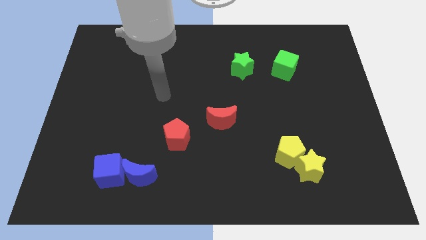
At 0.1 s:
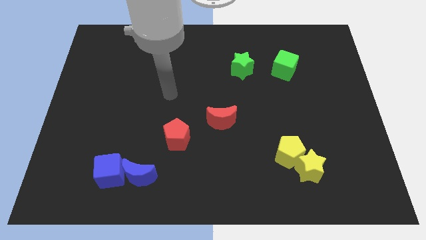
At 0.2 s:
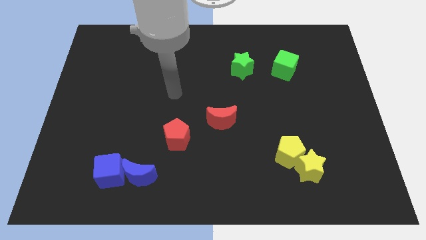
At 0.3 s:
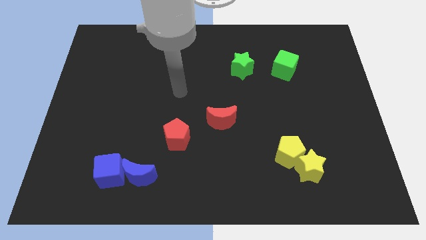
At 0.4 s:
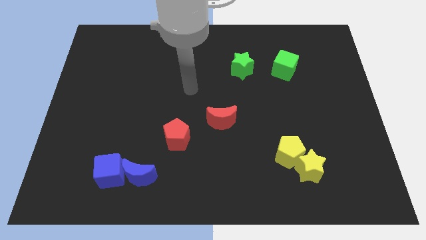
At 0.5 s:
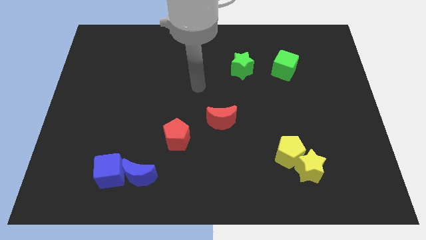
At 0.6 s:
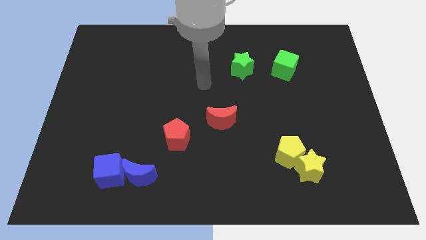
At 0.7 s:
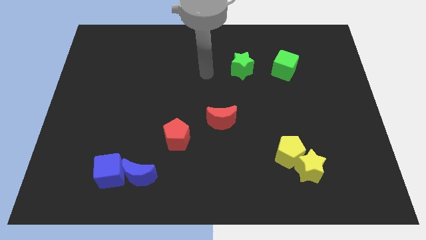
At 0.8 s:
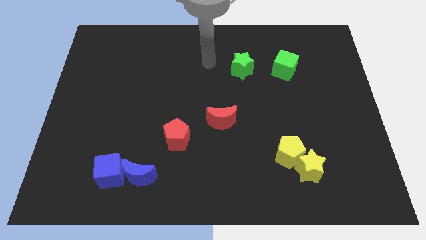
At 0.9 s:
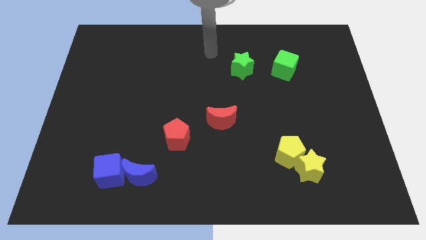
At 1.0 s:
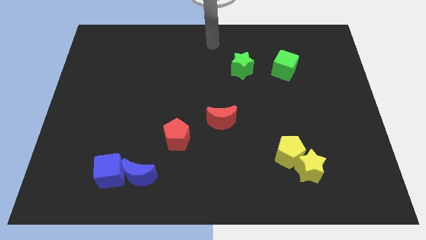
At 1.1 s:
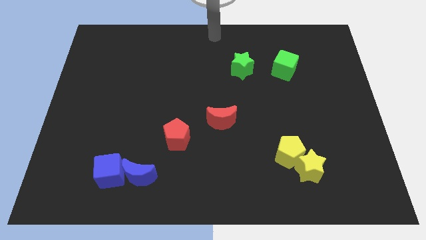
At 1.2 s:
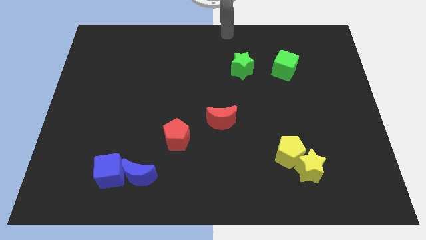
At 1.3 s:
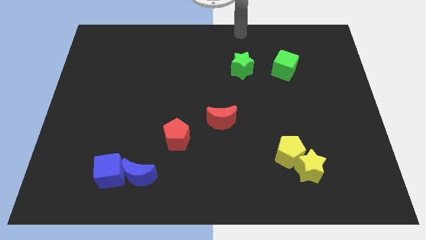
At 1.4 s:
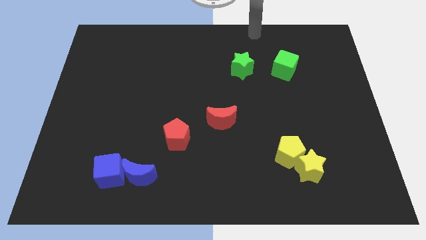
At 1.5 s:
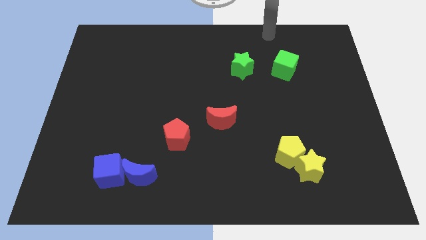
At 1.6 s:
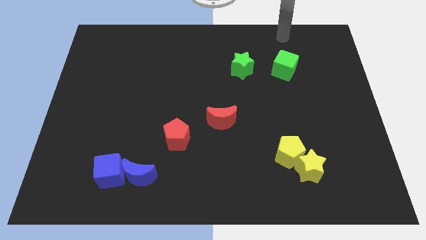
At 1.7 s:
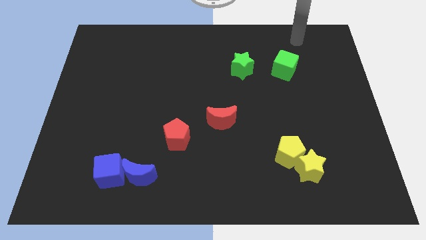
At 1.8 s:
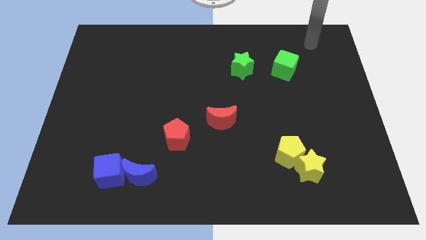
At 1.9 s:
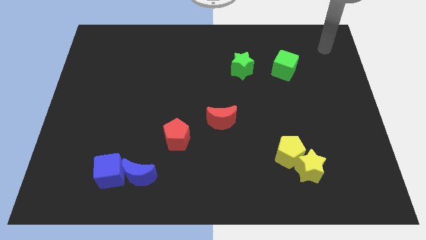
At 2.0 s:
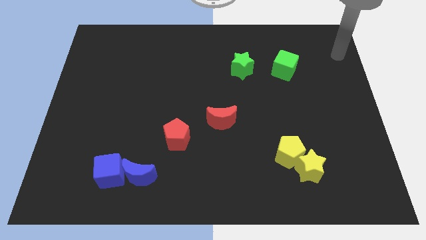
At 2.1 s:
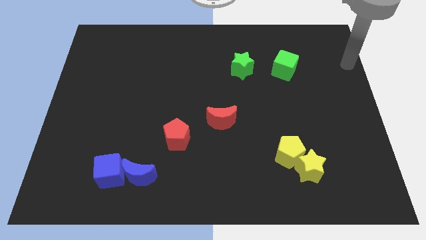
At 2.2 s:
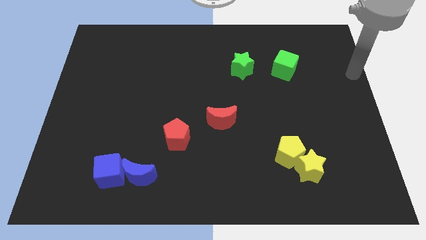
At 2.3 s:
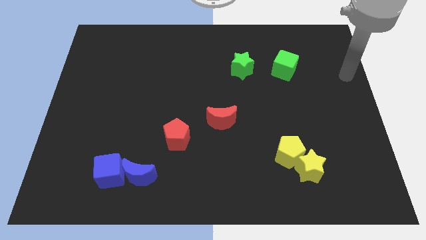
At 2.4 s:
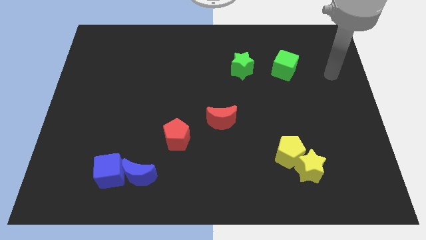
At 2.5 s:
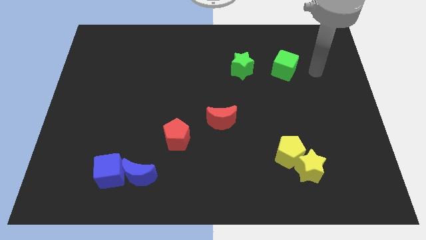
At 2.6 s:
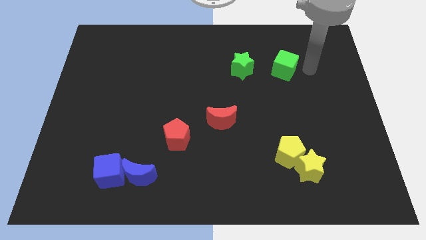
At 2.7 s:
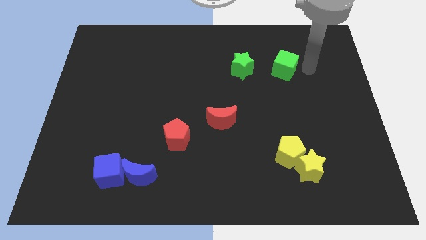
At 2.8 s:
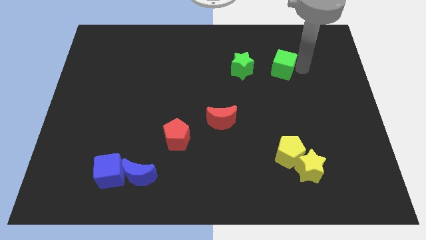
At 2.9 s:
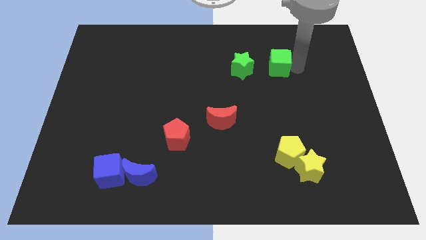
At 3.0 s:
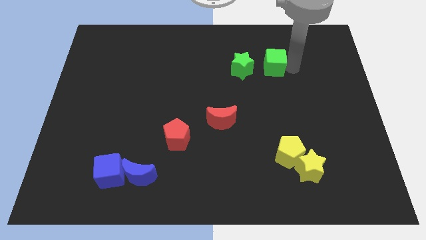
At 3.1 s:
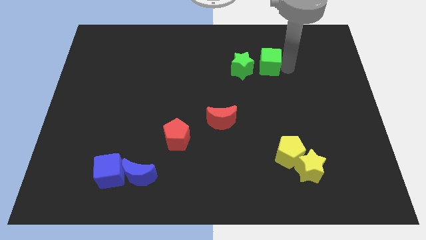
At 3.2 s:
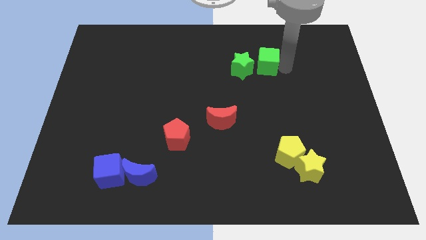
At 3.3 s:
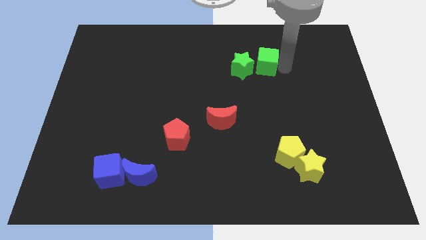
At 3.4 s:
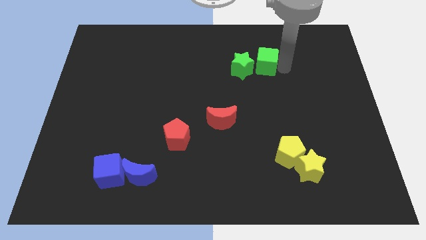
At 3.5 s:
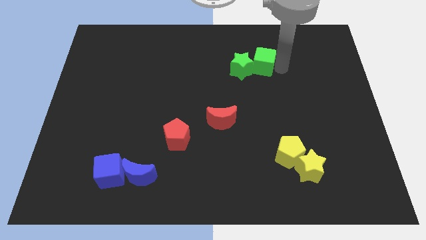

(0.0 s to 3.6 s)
move the green cube into the right side of the green star

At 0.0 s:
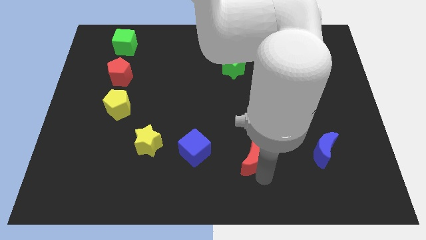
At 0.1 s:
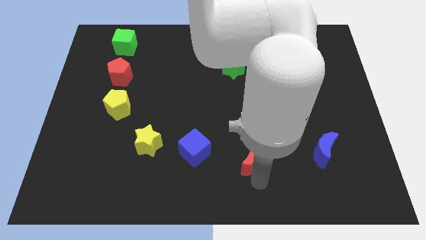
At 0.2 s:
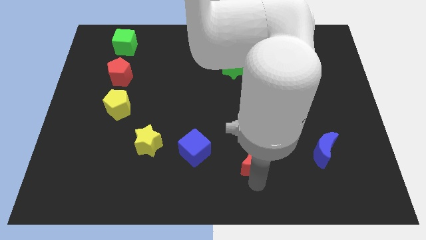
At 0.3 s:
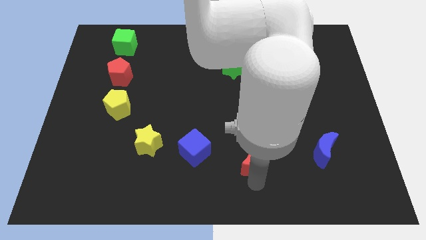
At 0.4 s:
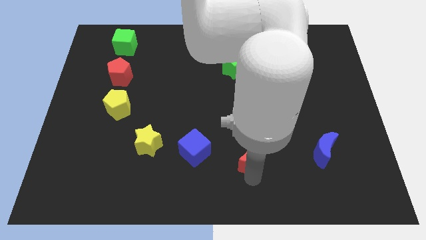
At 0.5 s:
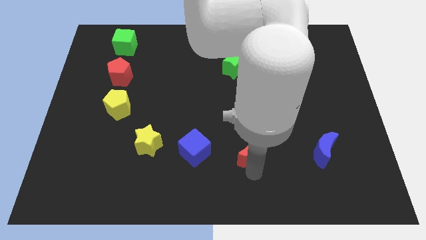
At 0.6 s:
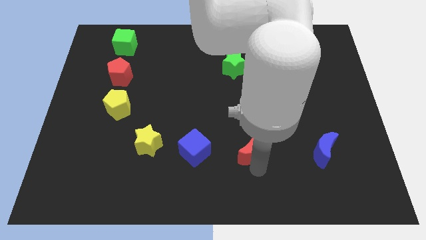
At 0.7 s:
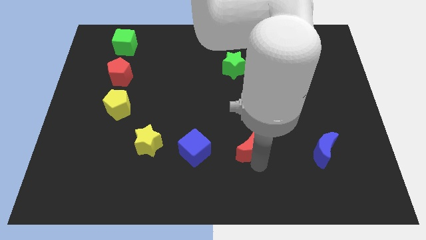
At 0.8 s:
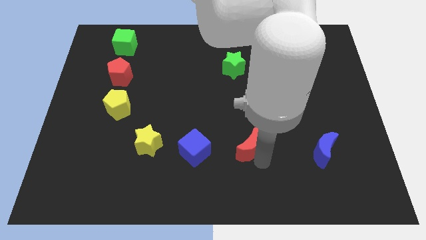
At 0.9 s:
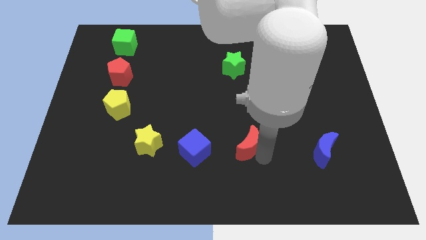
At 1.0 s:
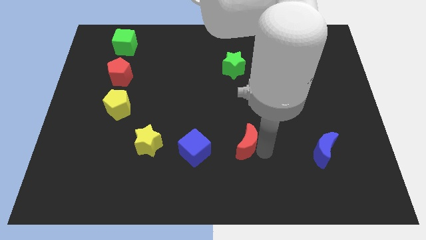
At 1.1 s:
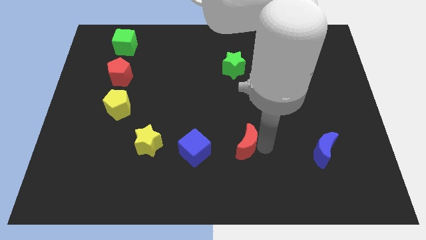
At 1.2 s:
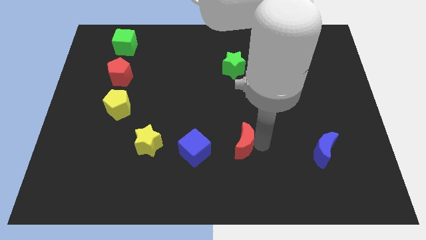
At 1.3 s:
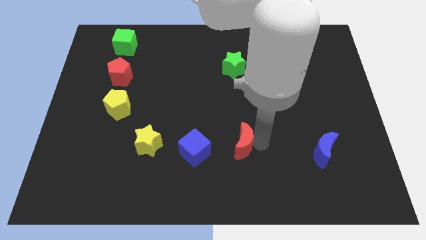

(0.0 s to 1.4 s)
push the red crescent in between the blue cube and the blue crescent

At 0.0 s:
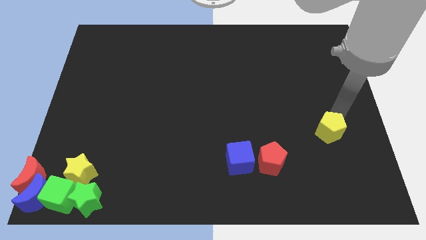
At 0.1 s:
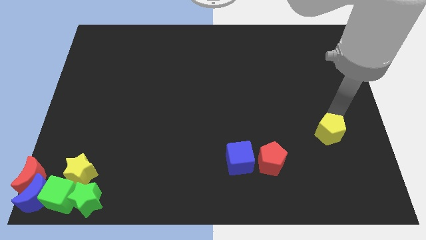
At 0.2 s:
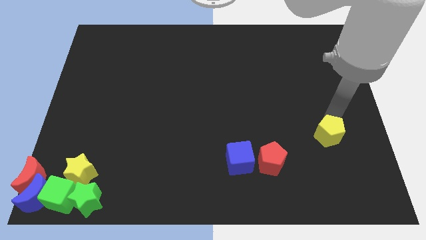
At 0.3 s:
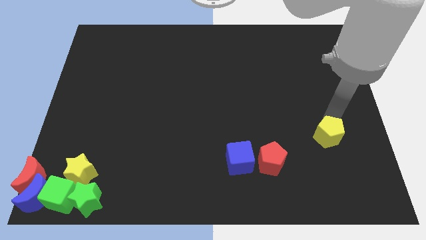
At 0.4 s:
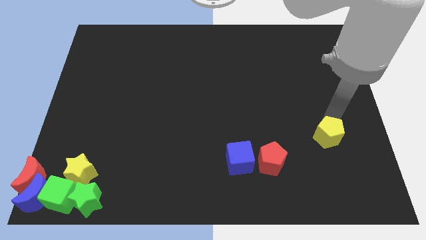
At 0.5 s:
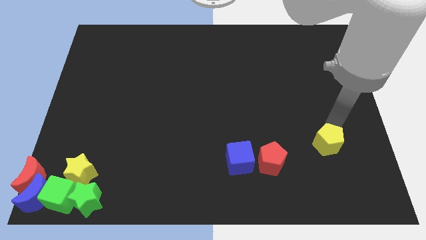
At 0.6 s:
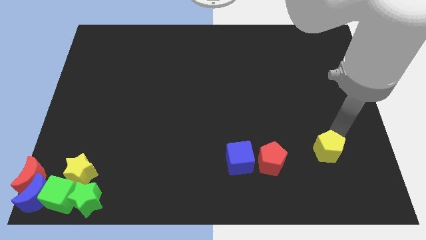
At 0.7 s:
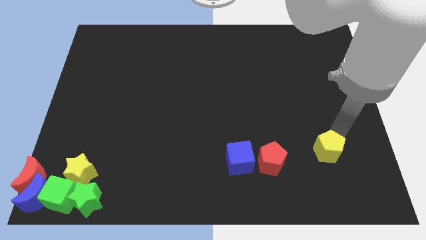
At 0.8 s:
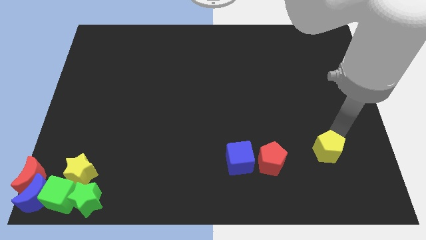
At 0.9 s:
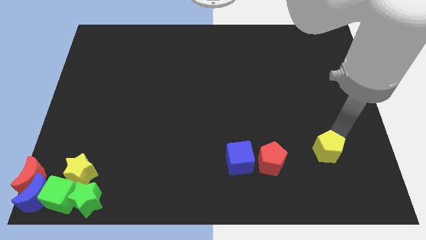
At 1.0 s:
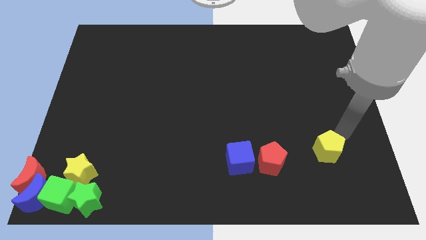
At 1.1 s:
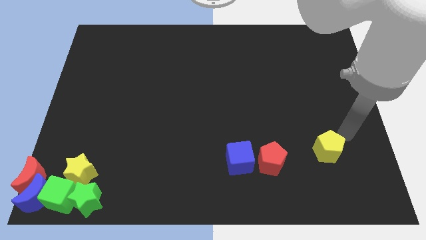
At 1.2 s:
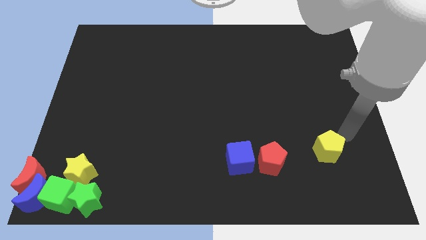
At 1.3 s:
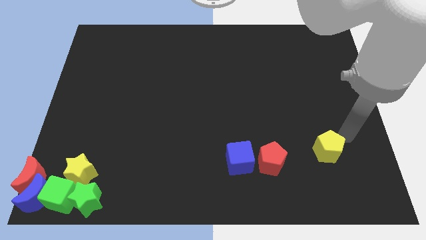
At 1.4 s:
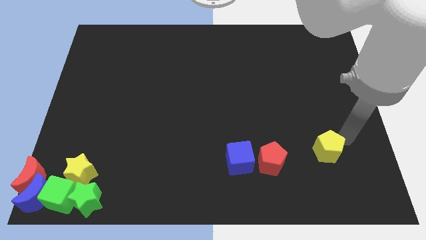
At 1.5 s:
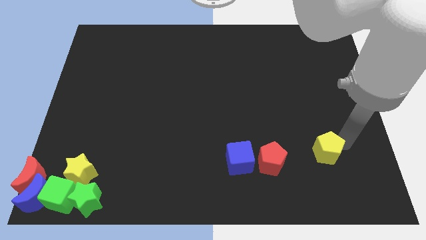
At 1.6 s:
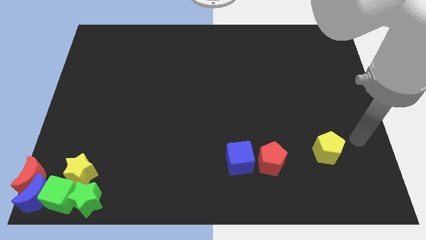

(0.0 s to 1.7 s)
push yellow pentagon to the right of the red pentagon

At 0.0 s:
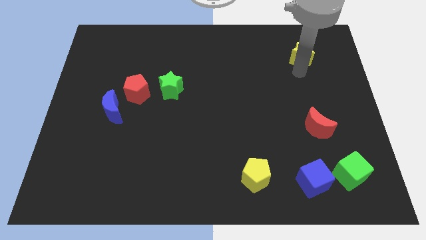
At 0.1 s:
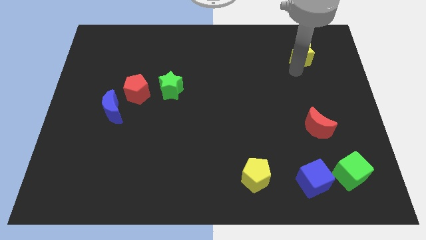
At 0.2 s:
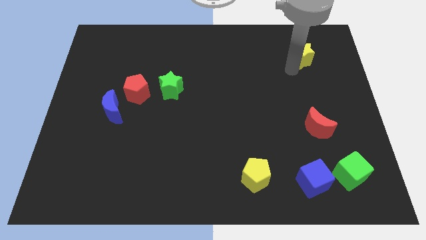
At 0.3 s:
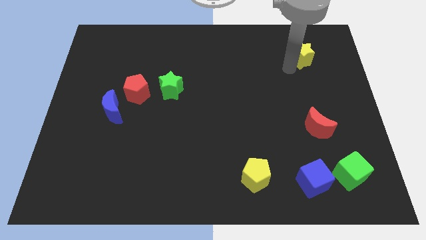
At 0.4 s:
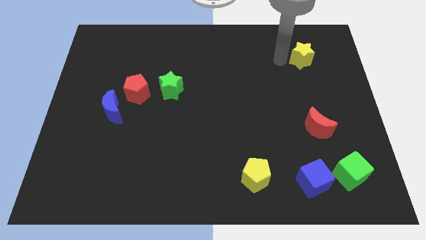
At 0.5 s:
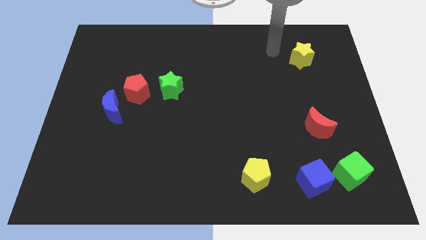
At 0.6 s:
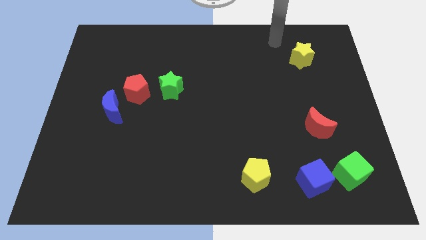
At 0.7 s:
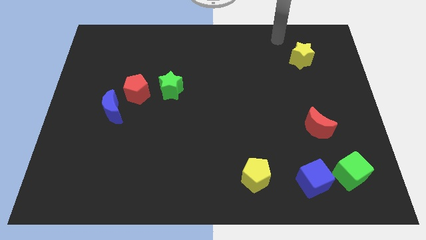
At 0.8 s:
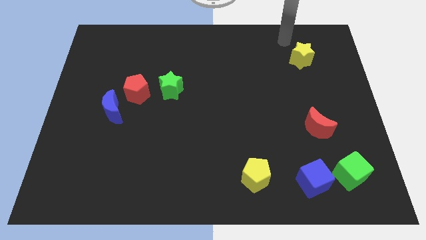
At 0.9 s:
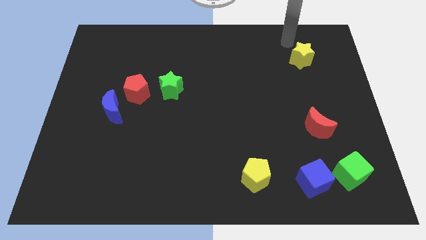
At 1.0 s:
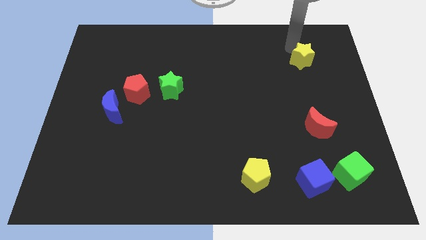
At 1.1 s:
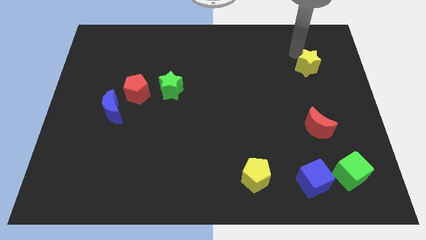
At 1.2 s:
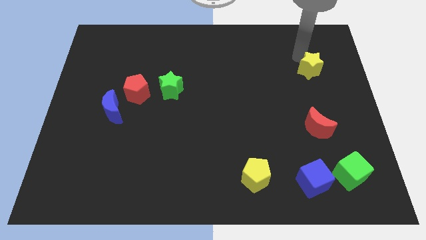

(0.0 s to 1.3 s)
move the yellow star to the top of the red crescent

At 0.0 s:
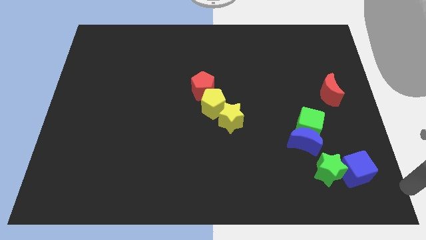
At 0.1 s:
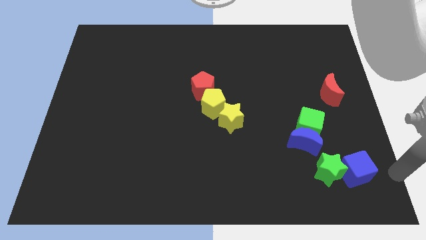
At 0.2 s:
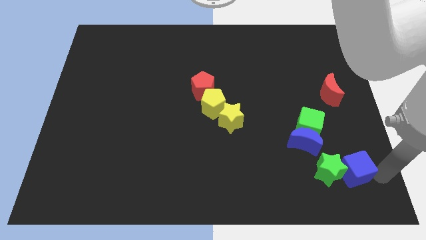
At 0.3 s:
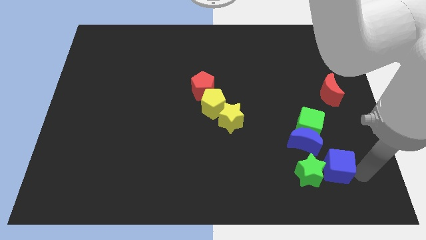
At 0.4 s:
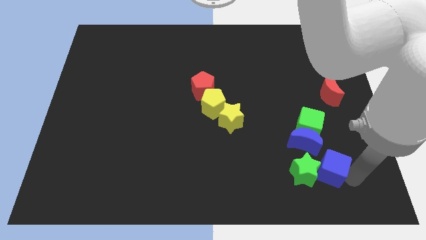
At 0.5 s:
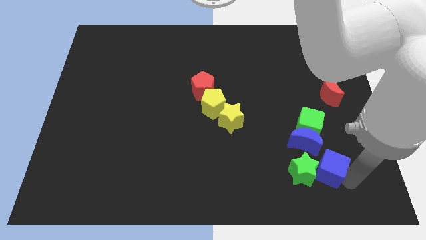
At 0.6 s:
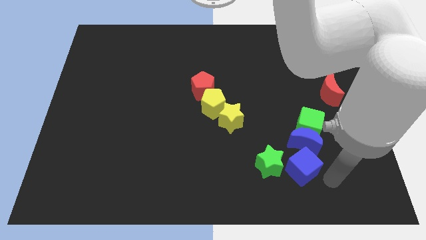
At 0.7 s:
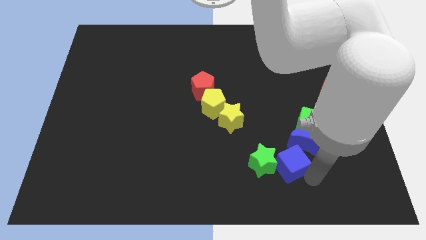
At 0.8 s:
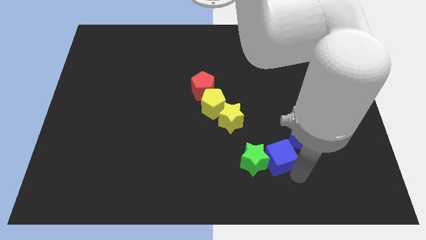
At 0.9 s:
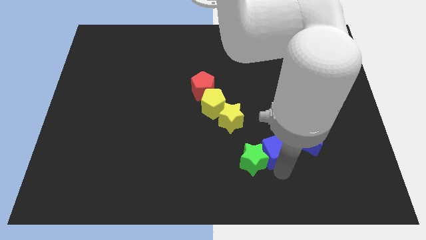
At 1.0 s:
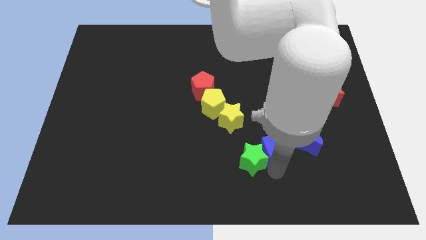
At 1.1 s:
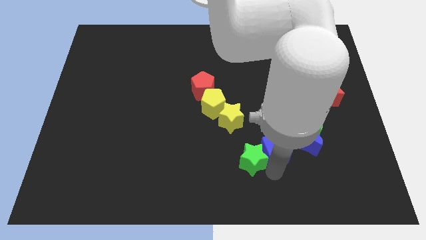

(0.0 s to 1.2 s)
push the blue block with green star to the center of the board
